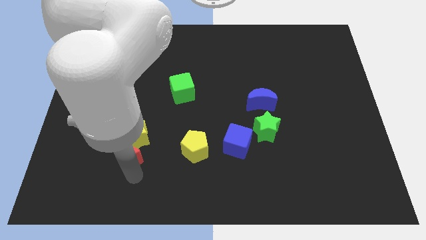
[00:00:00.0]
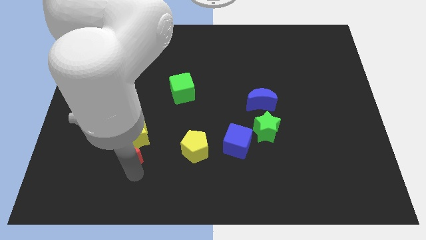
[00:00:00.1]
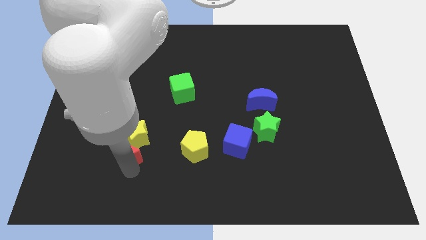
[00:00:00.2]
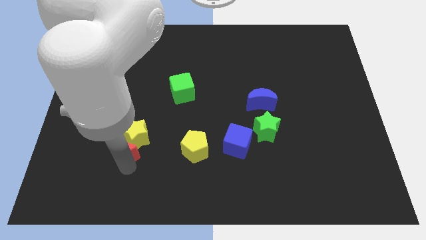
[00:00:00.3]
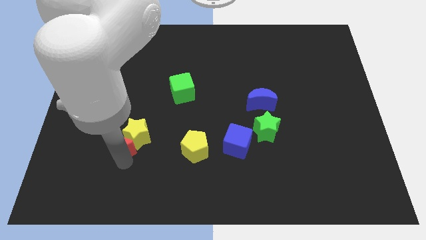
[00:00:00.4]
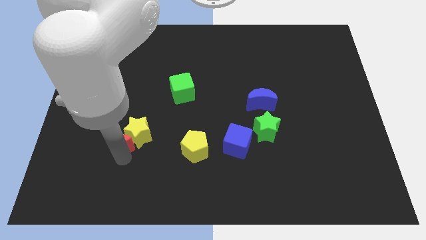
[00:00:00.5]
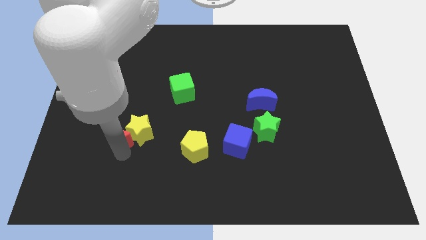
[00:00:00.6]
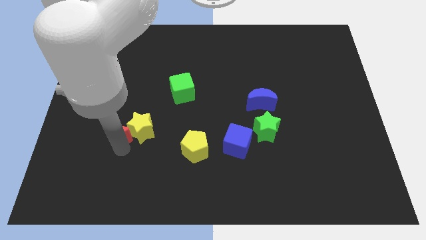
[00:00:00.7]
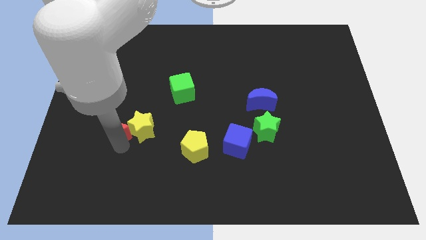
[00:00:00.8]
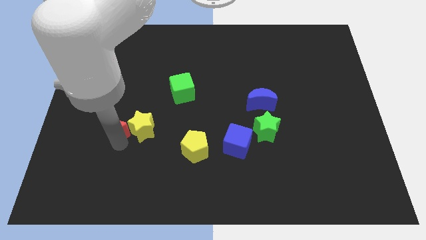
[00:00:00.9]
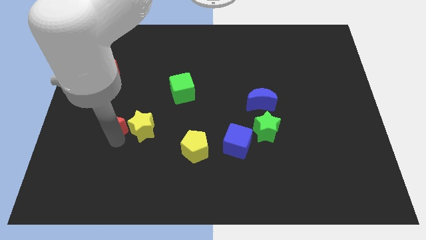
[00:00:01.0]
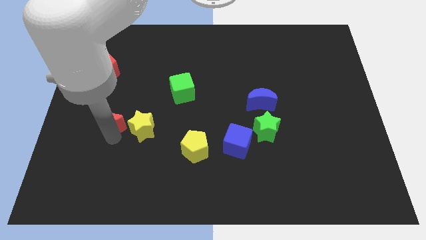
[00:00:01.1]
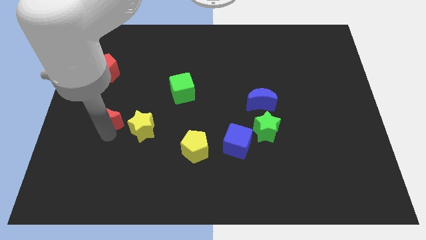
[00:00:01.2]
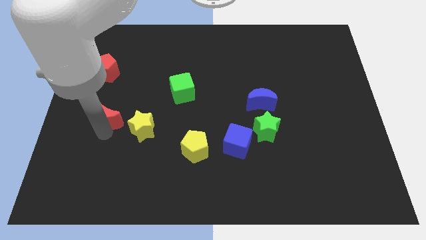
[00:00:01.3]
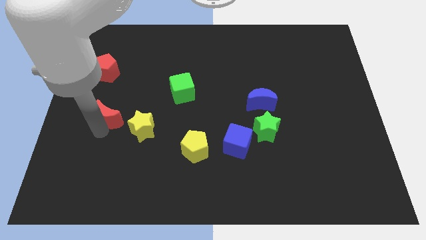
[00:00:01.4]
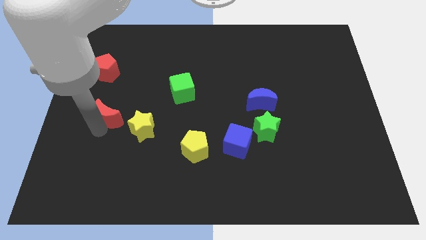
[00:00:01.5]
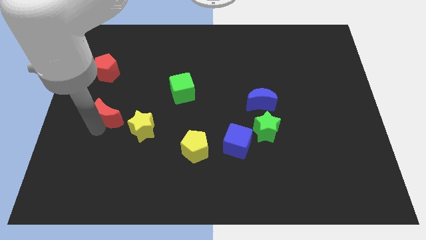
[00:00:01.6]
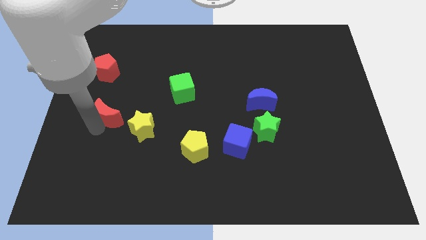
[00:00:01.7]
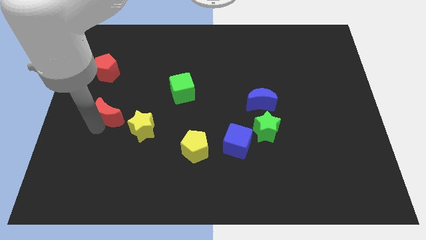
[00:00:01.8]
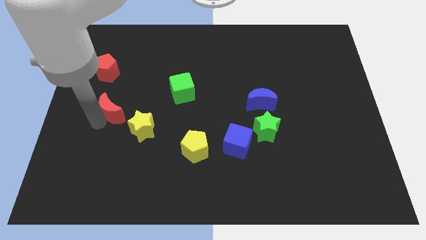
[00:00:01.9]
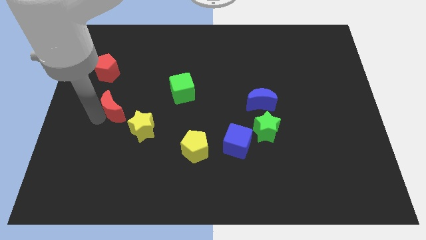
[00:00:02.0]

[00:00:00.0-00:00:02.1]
drag the red moon to the top left of yellow star

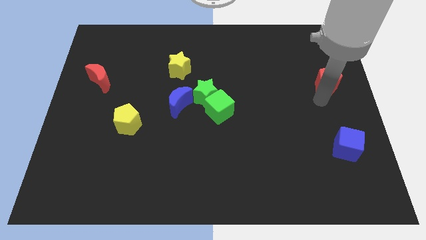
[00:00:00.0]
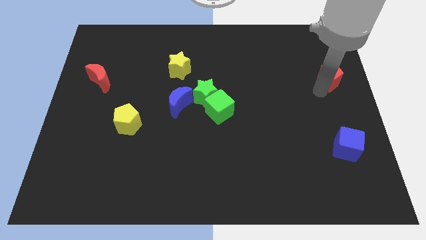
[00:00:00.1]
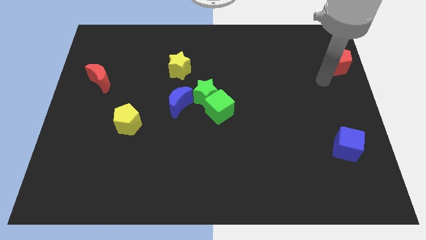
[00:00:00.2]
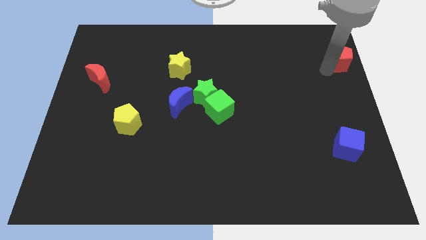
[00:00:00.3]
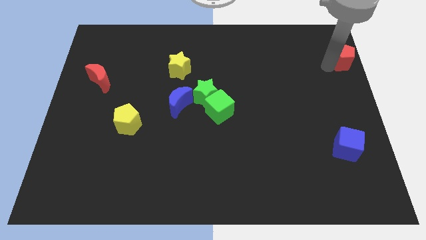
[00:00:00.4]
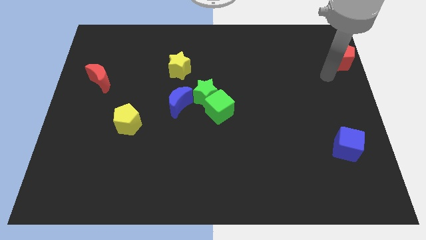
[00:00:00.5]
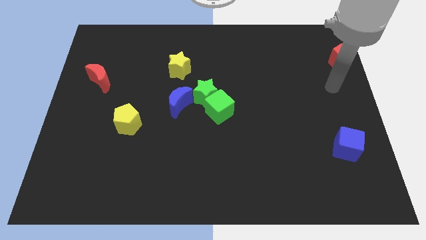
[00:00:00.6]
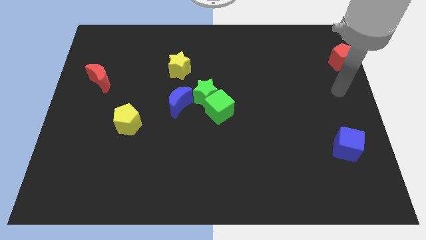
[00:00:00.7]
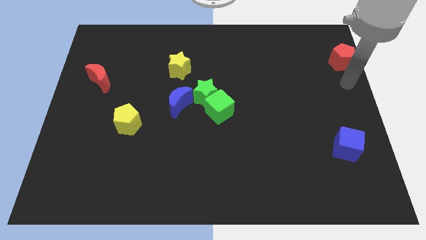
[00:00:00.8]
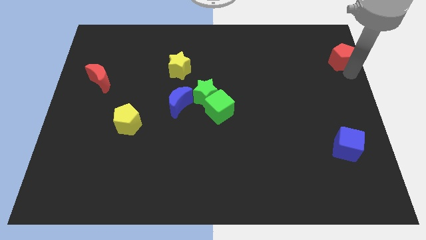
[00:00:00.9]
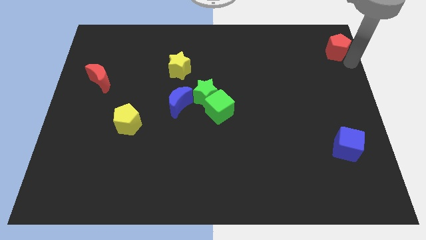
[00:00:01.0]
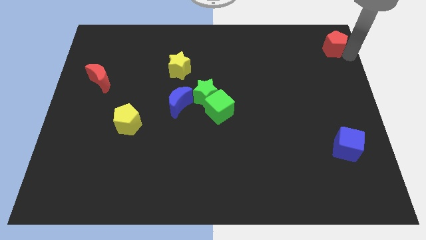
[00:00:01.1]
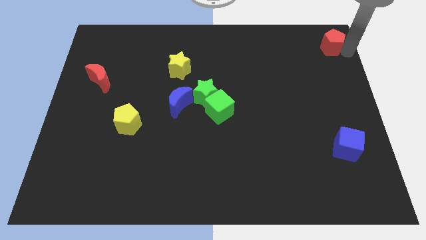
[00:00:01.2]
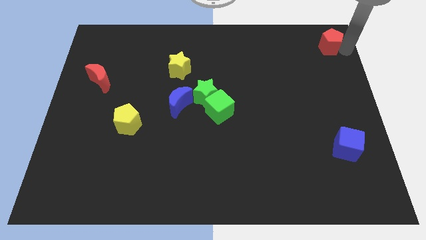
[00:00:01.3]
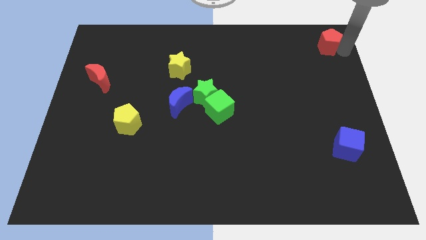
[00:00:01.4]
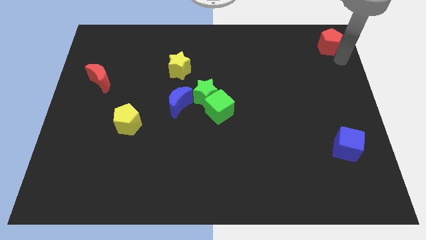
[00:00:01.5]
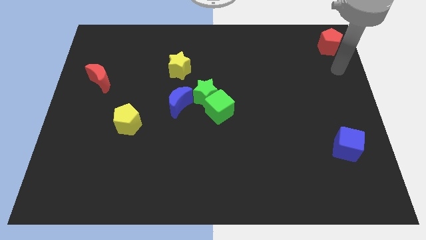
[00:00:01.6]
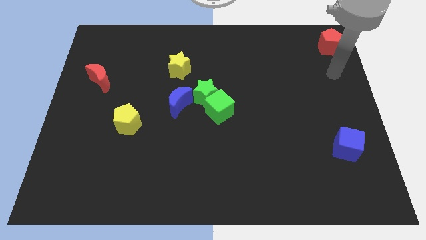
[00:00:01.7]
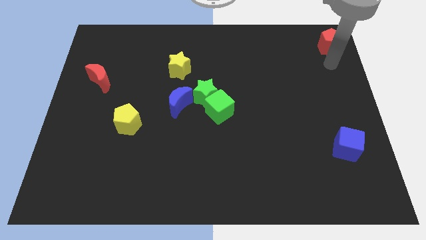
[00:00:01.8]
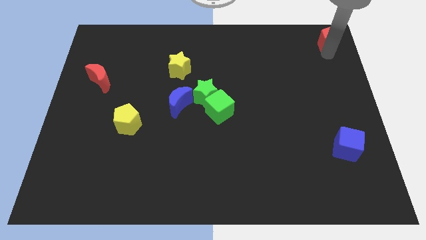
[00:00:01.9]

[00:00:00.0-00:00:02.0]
move the red pentagon to the top right

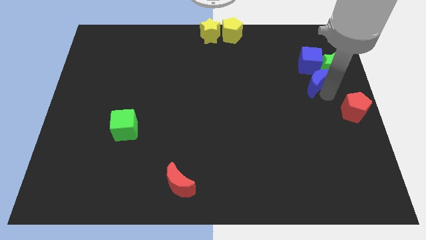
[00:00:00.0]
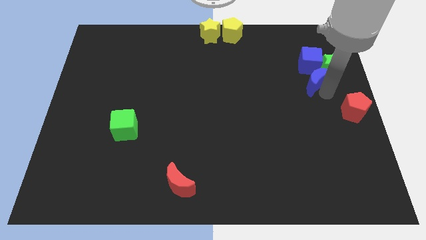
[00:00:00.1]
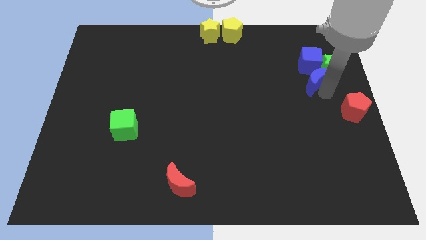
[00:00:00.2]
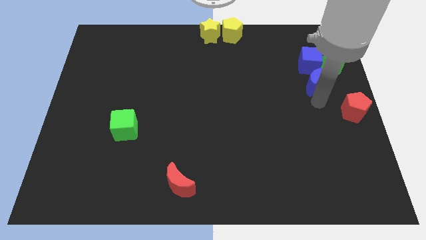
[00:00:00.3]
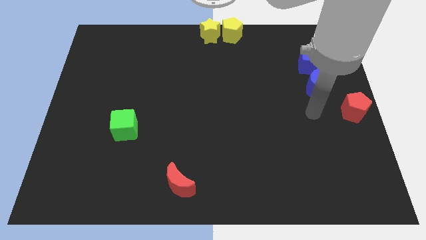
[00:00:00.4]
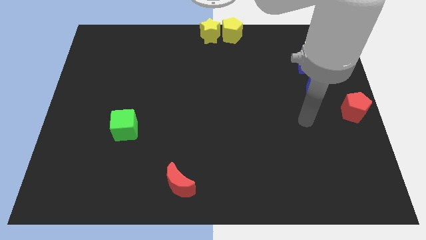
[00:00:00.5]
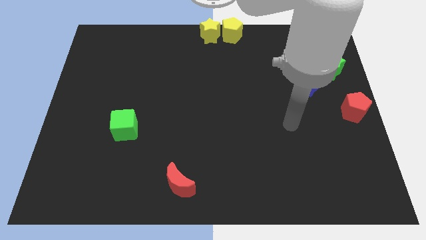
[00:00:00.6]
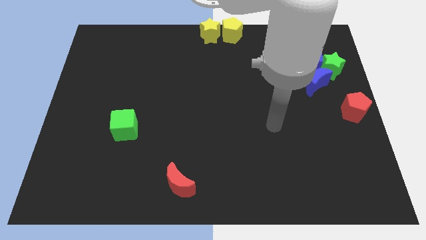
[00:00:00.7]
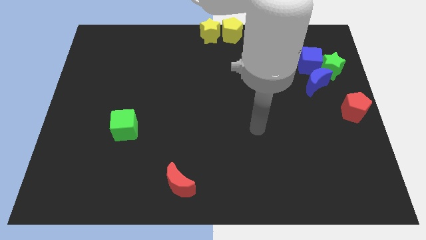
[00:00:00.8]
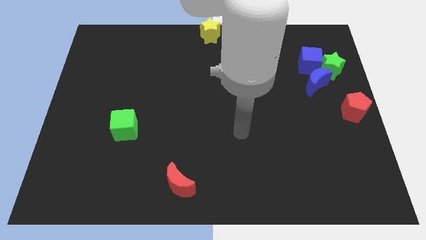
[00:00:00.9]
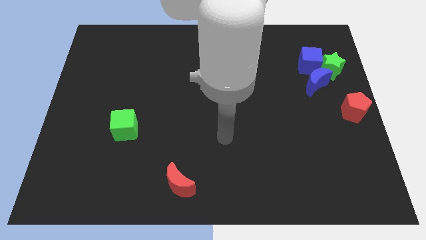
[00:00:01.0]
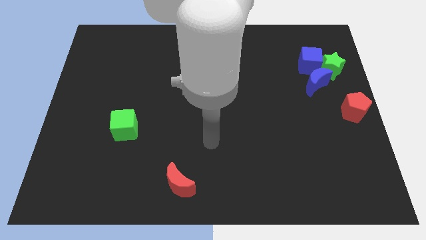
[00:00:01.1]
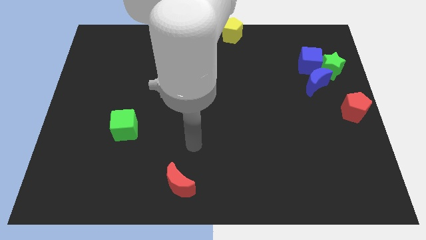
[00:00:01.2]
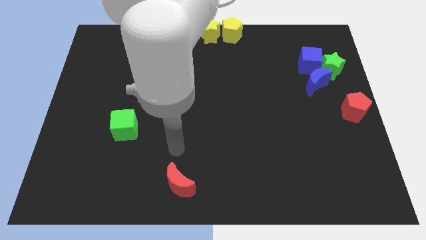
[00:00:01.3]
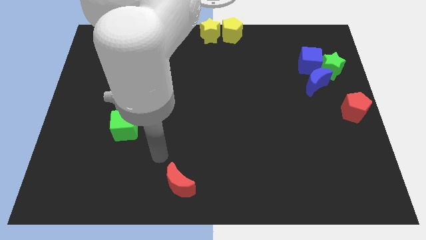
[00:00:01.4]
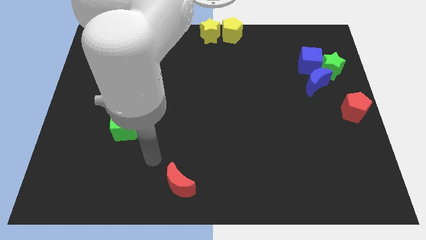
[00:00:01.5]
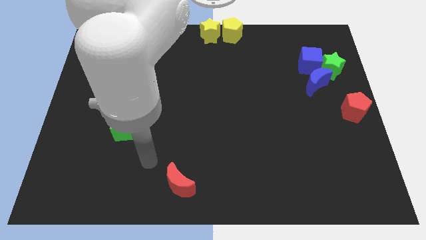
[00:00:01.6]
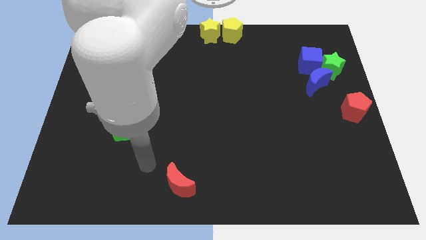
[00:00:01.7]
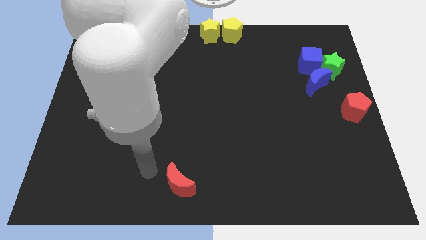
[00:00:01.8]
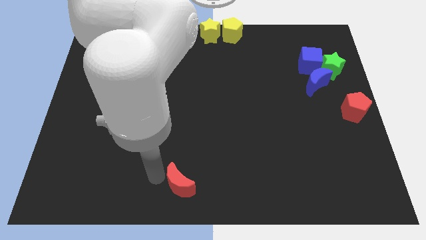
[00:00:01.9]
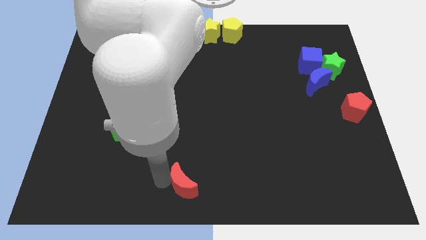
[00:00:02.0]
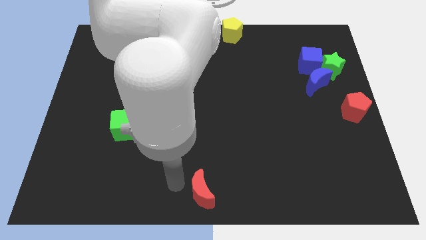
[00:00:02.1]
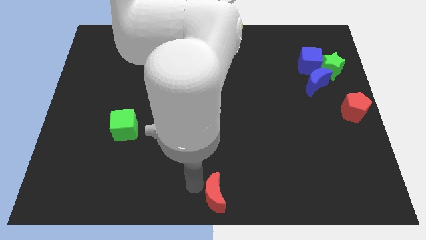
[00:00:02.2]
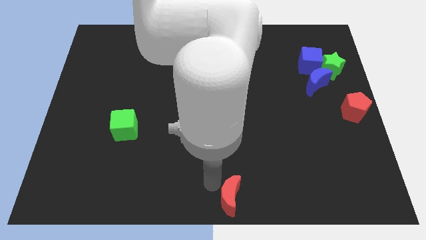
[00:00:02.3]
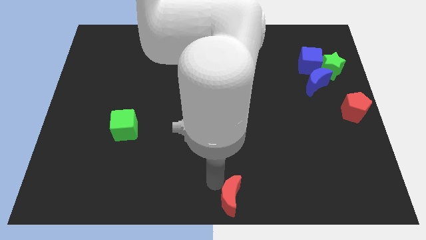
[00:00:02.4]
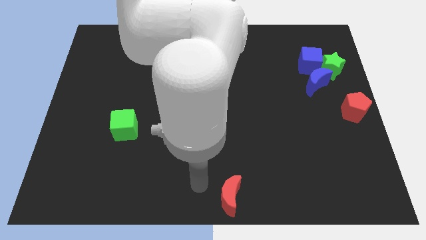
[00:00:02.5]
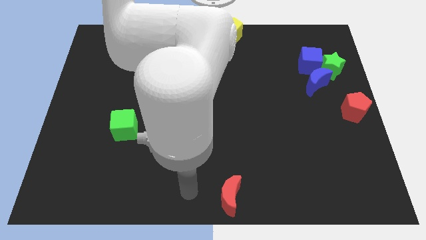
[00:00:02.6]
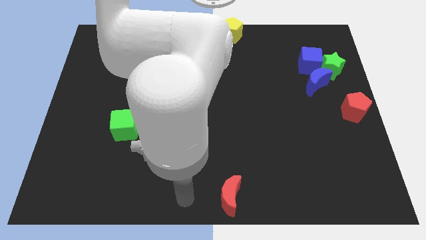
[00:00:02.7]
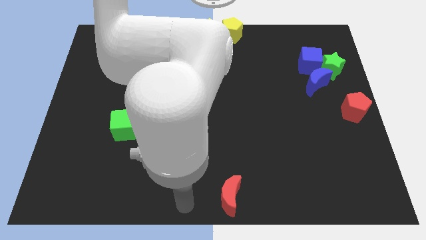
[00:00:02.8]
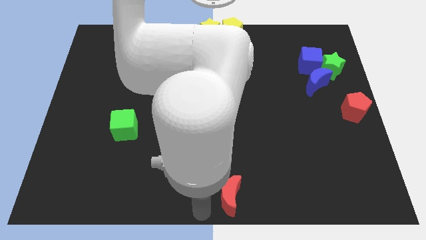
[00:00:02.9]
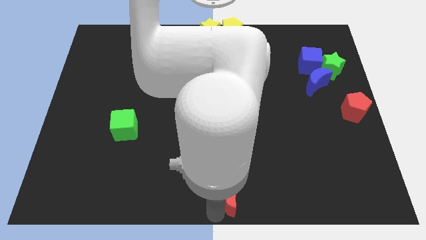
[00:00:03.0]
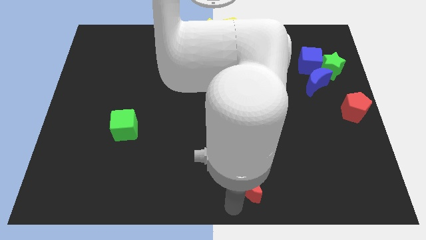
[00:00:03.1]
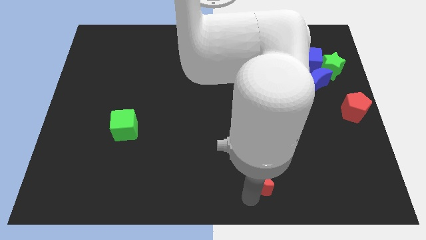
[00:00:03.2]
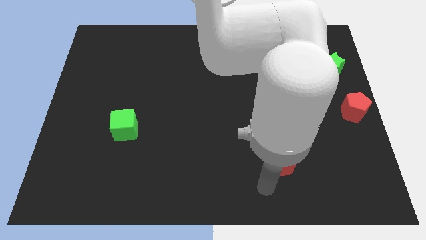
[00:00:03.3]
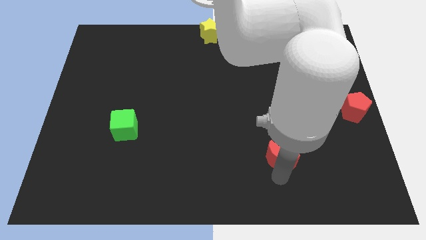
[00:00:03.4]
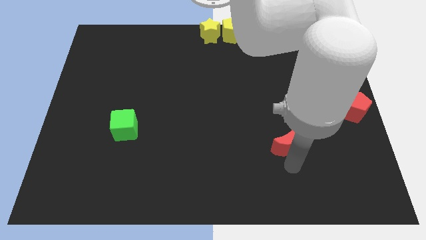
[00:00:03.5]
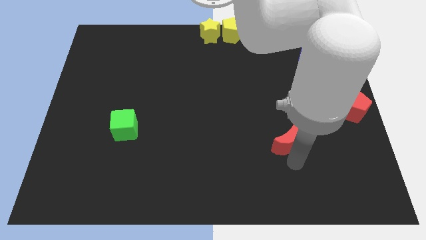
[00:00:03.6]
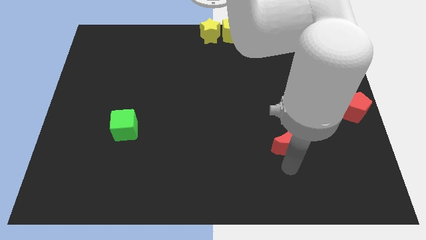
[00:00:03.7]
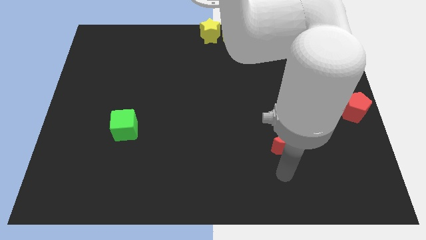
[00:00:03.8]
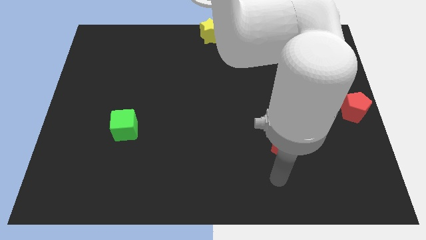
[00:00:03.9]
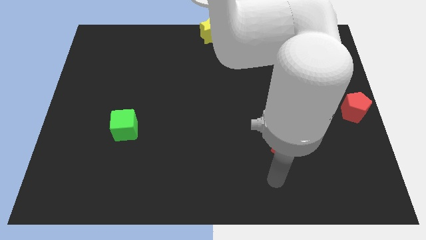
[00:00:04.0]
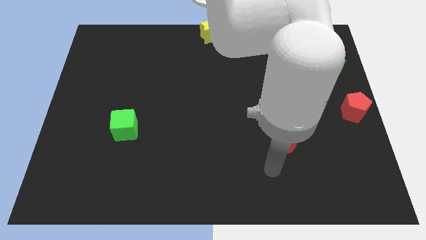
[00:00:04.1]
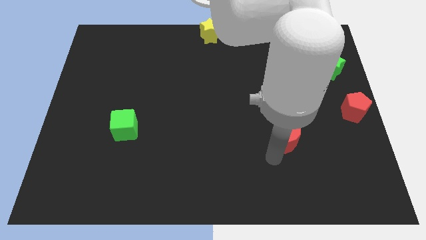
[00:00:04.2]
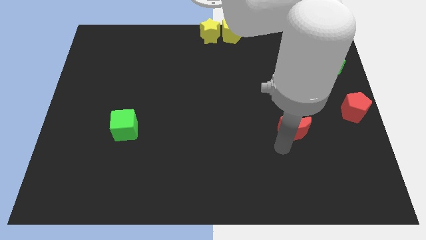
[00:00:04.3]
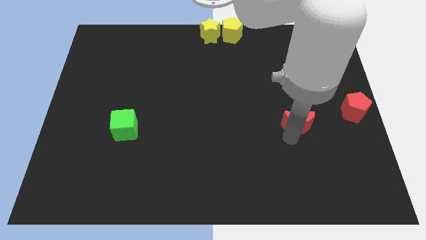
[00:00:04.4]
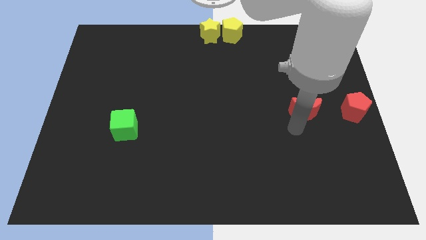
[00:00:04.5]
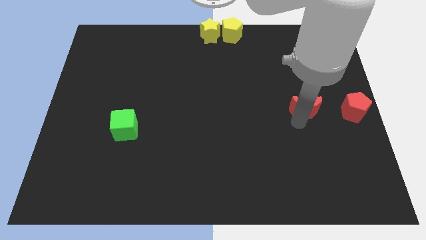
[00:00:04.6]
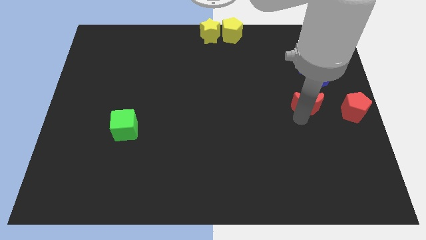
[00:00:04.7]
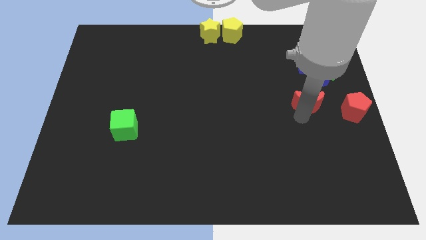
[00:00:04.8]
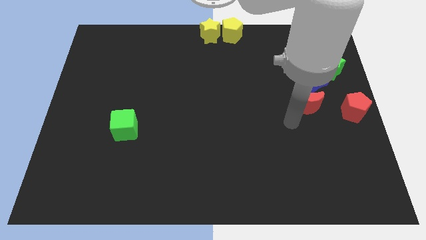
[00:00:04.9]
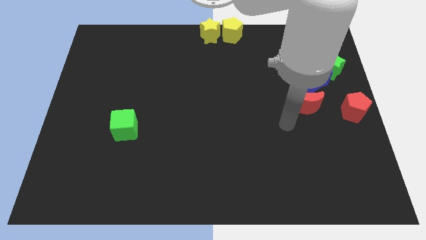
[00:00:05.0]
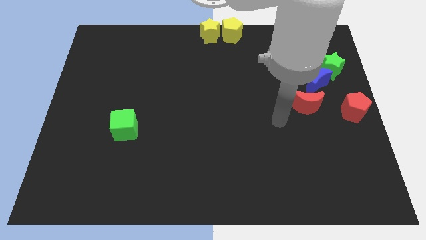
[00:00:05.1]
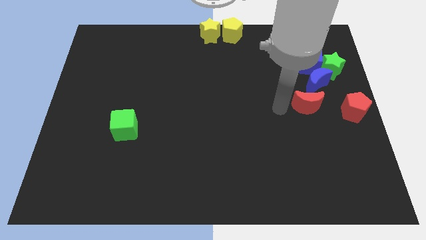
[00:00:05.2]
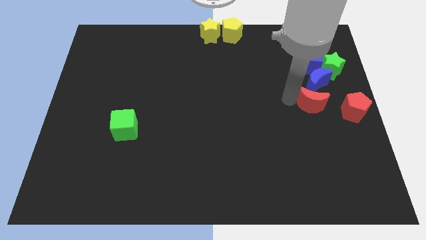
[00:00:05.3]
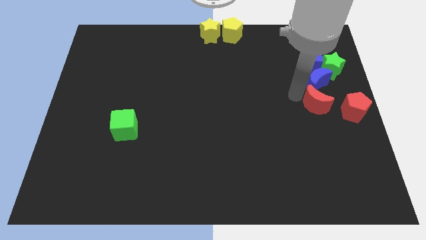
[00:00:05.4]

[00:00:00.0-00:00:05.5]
place the red crescent below the blue crescent
